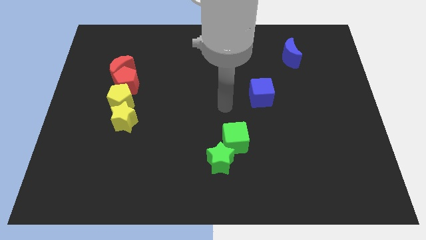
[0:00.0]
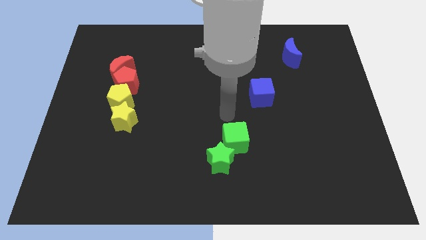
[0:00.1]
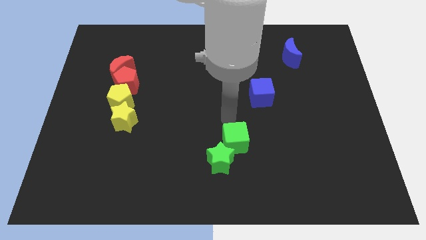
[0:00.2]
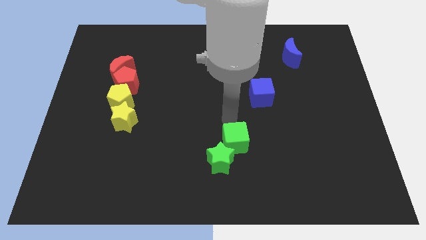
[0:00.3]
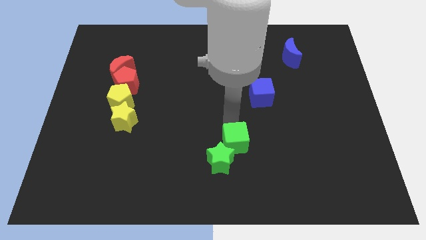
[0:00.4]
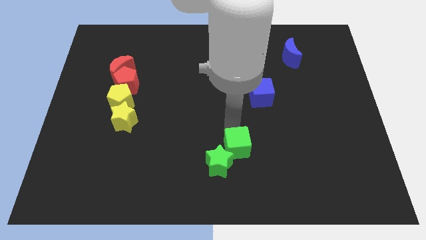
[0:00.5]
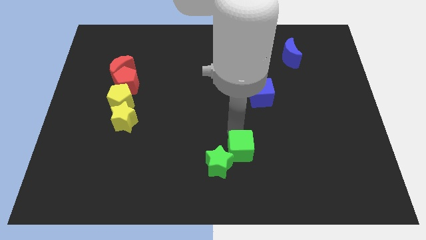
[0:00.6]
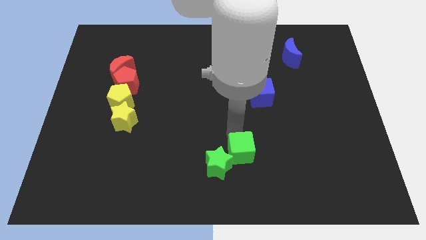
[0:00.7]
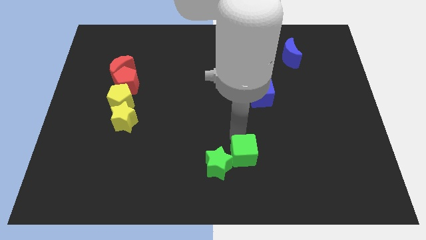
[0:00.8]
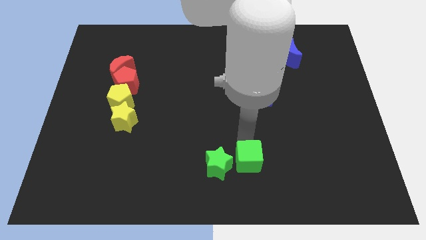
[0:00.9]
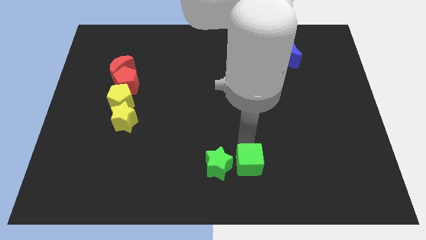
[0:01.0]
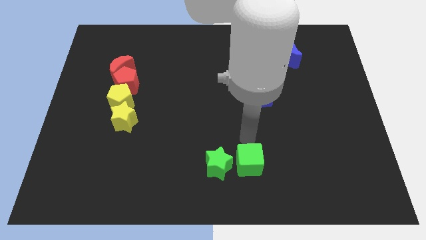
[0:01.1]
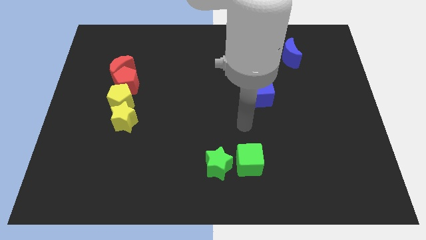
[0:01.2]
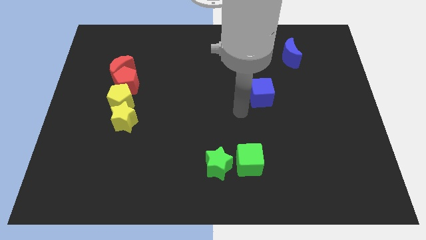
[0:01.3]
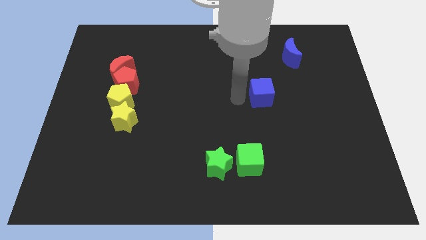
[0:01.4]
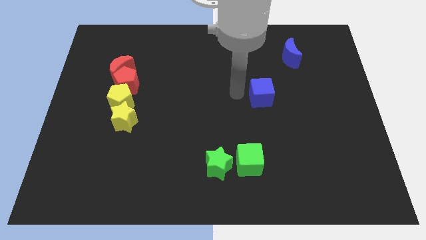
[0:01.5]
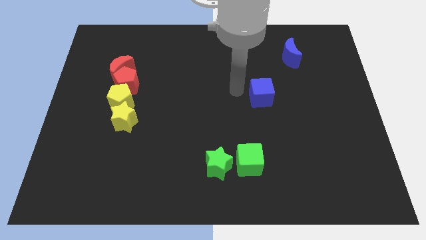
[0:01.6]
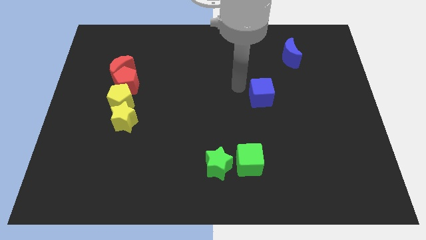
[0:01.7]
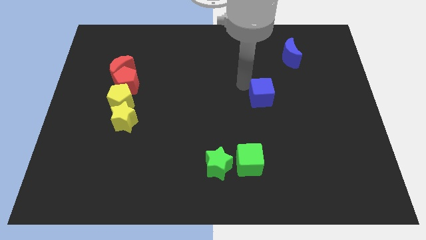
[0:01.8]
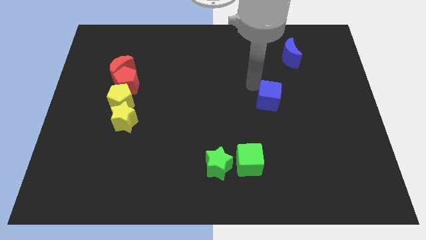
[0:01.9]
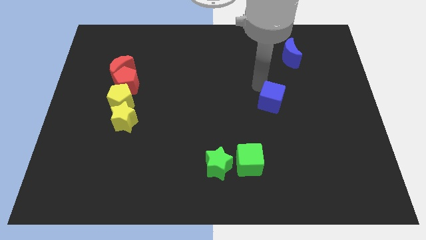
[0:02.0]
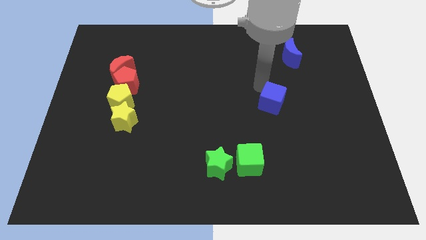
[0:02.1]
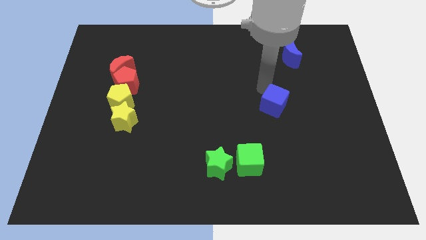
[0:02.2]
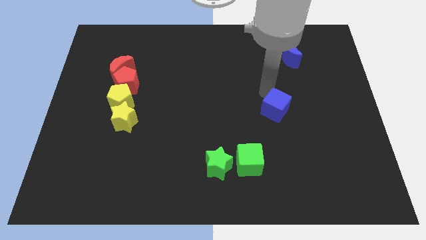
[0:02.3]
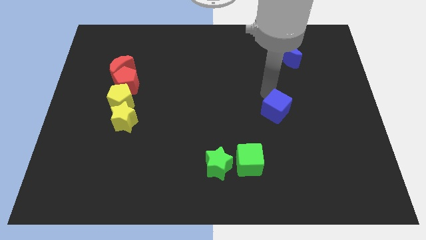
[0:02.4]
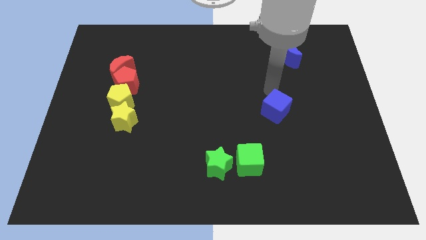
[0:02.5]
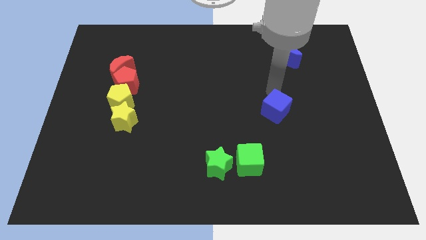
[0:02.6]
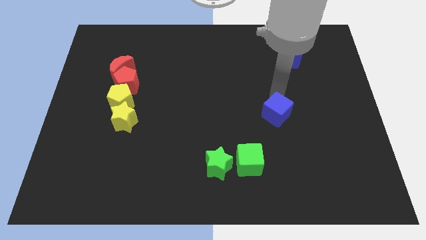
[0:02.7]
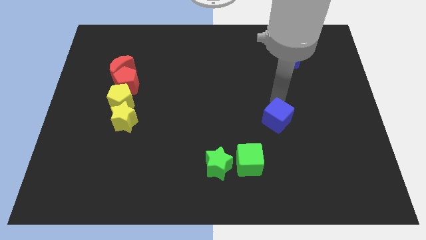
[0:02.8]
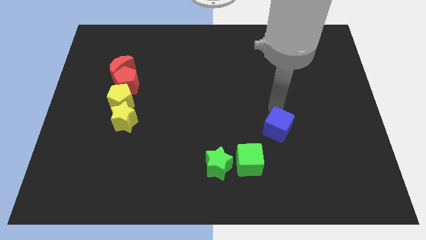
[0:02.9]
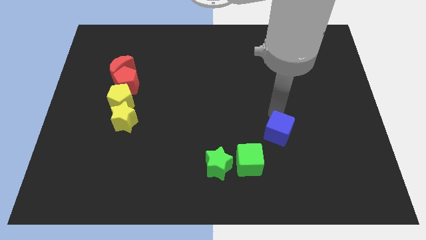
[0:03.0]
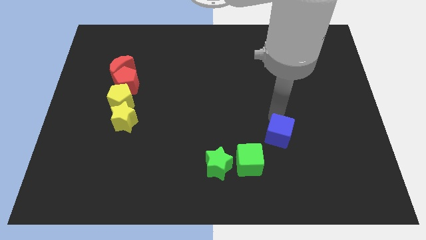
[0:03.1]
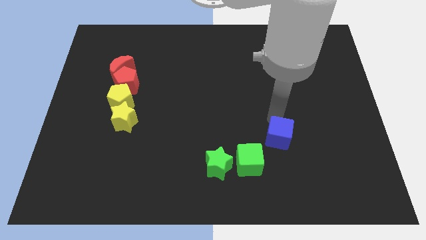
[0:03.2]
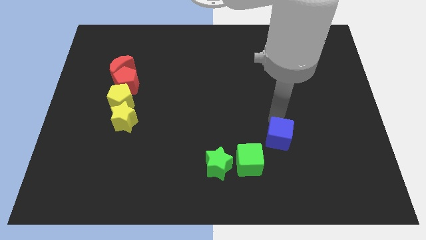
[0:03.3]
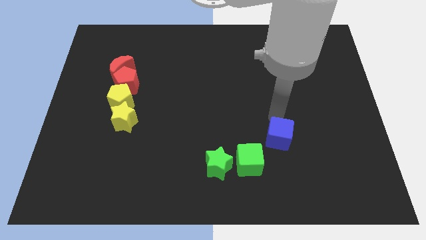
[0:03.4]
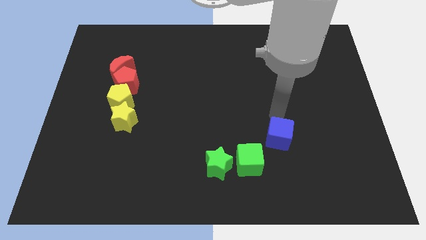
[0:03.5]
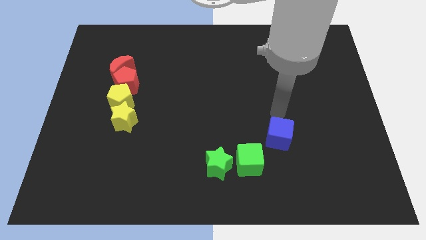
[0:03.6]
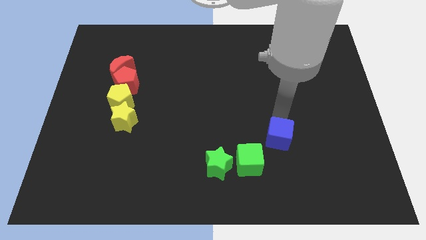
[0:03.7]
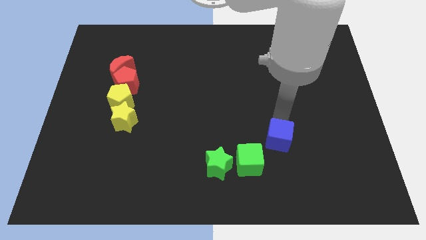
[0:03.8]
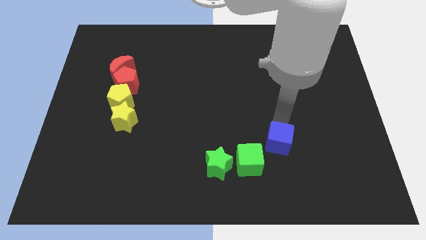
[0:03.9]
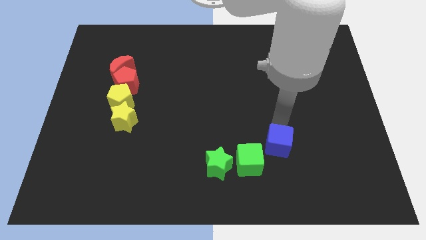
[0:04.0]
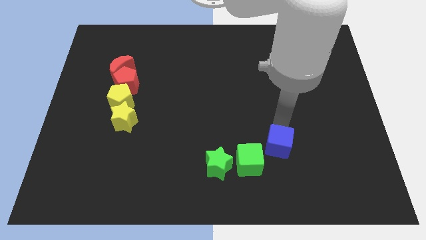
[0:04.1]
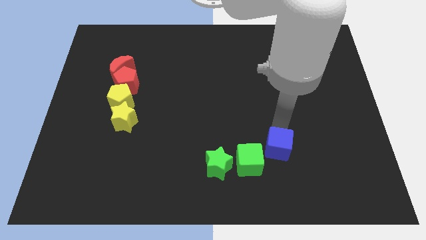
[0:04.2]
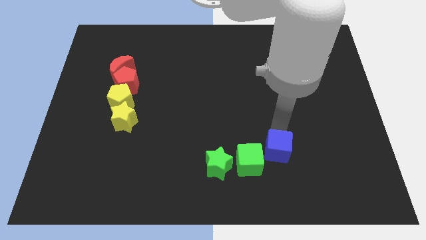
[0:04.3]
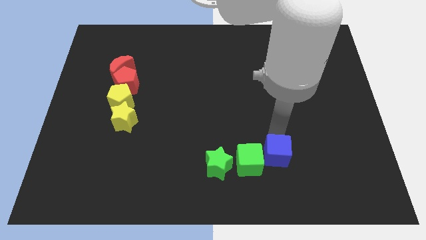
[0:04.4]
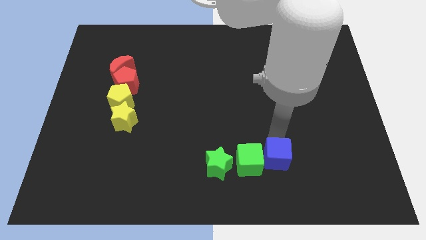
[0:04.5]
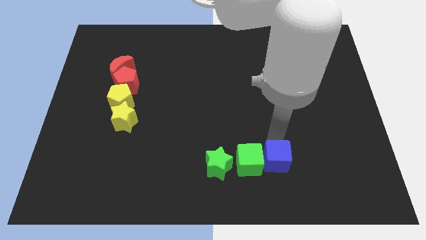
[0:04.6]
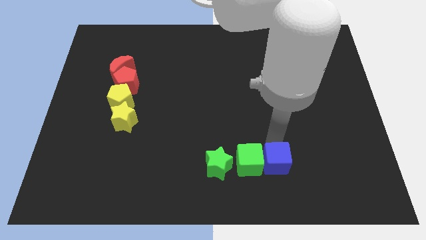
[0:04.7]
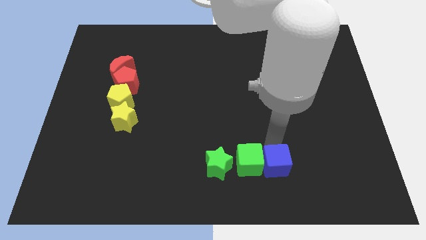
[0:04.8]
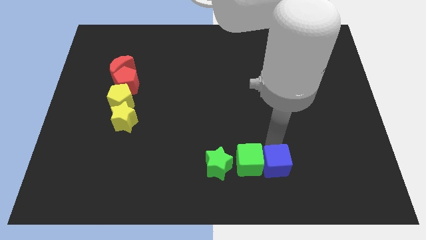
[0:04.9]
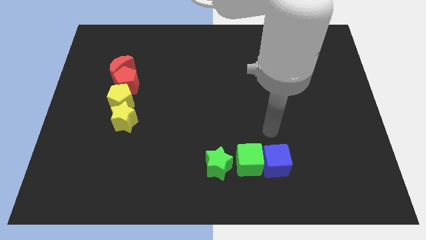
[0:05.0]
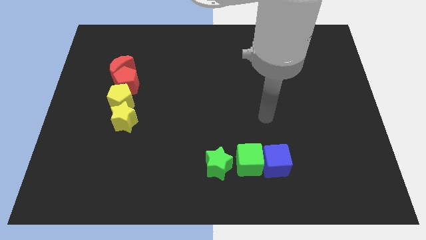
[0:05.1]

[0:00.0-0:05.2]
place blue cube to the right of green cube

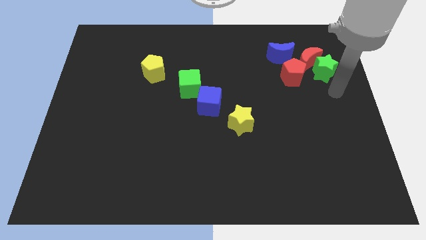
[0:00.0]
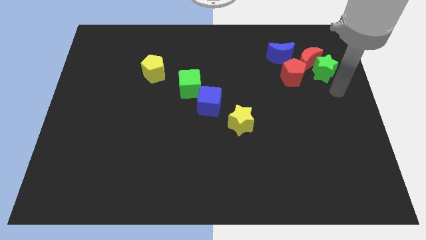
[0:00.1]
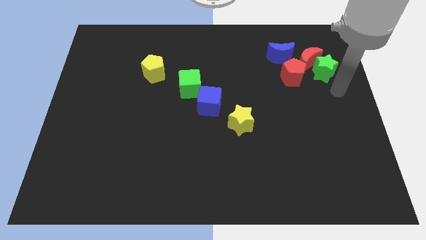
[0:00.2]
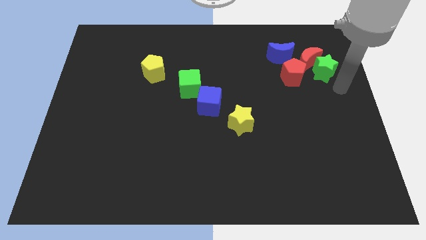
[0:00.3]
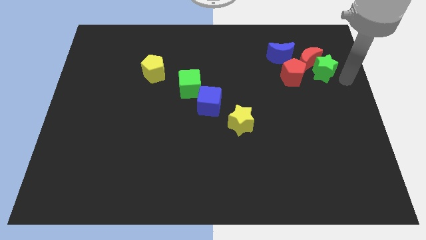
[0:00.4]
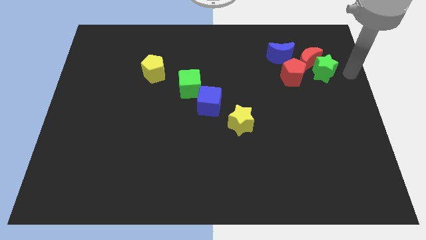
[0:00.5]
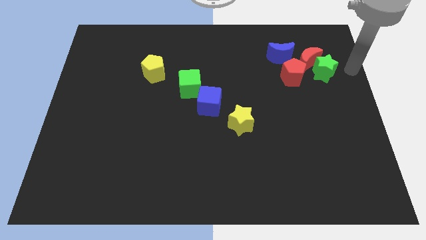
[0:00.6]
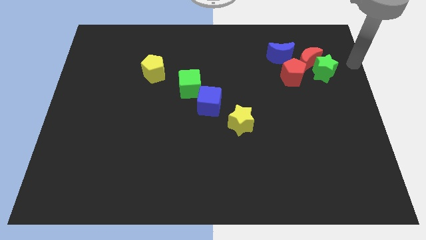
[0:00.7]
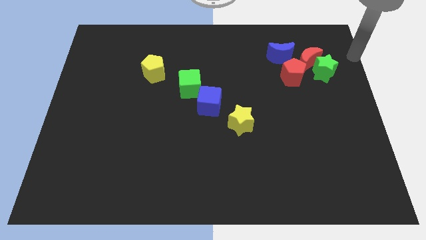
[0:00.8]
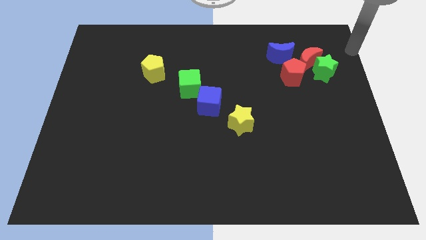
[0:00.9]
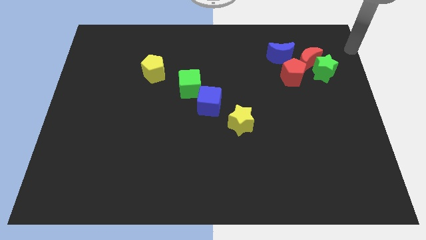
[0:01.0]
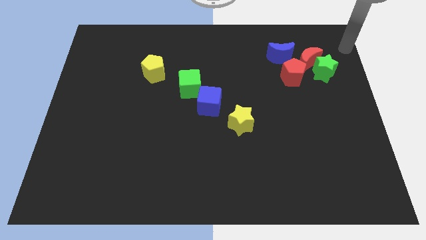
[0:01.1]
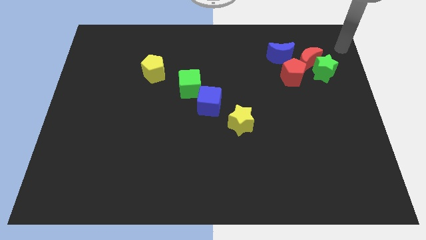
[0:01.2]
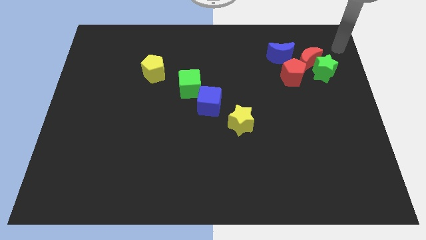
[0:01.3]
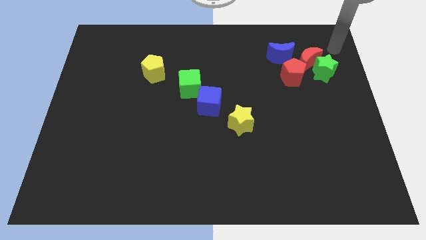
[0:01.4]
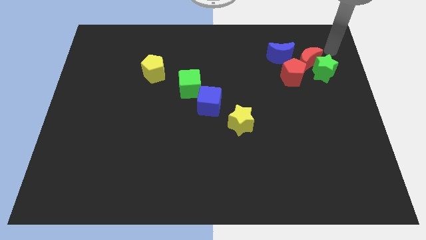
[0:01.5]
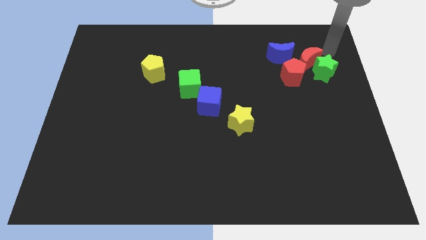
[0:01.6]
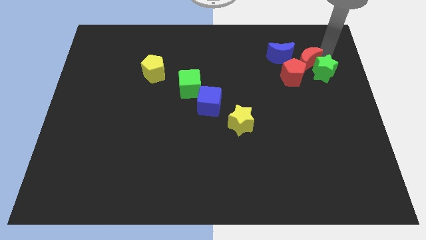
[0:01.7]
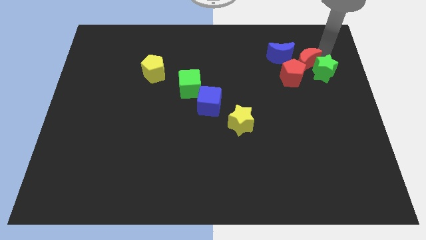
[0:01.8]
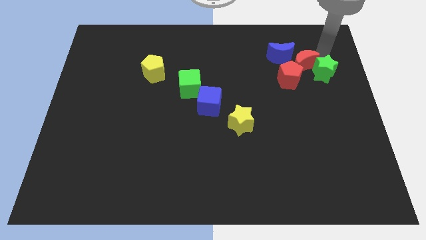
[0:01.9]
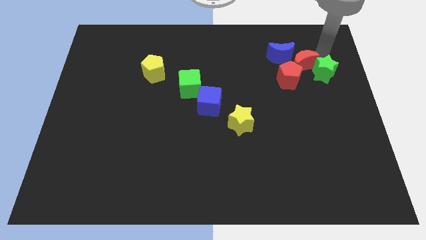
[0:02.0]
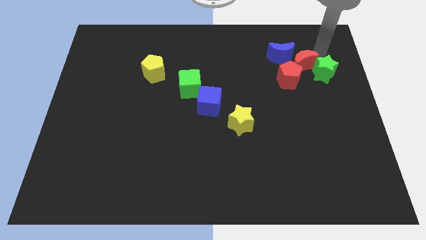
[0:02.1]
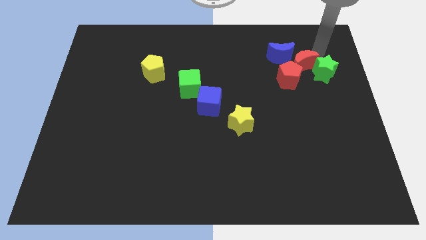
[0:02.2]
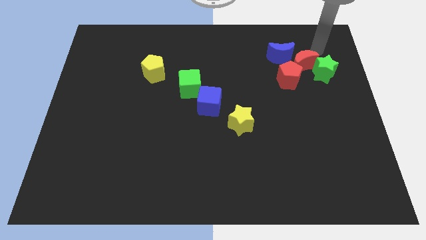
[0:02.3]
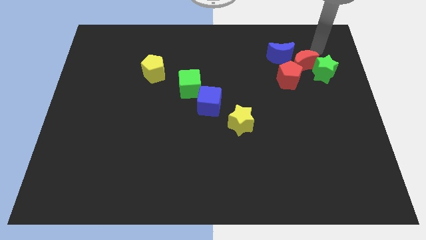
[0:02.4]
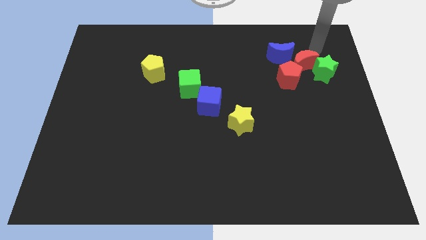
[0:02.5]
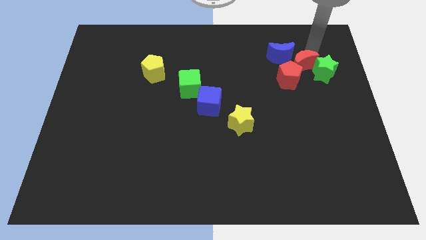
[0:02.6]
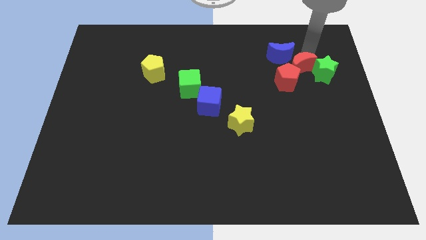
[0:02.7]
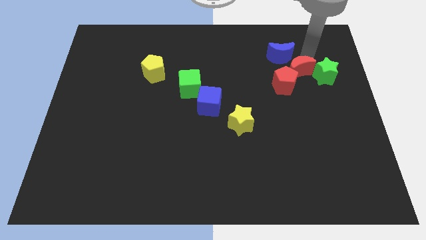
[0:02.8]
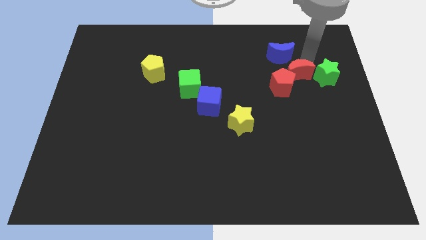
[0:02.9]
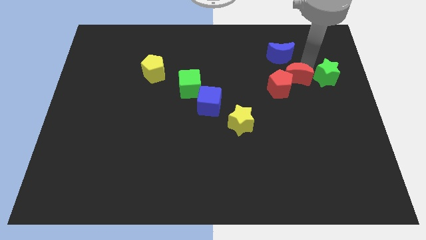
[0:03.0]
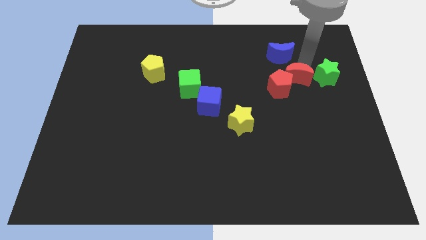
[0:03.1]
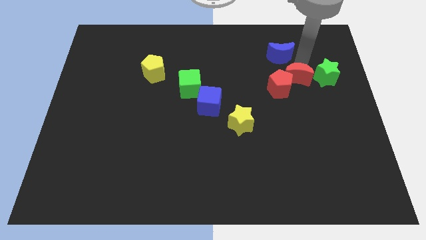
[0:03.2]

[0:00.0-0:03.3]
push the red pentagon down towards the center with the red moon

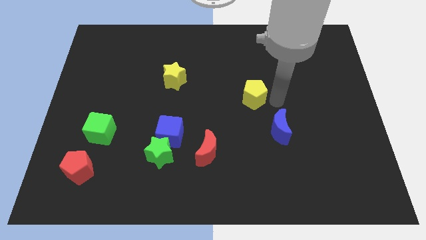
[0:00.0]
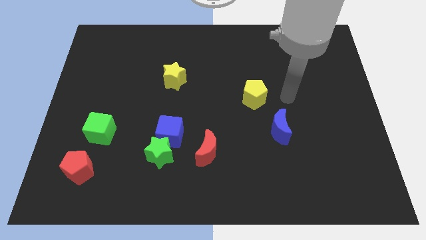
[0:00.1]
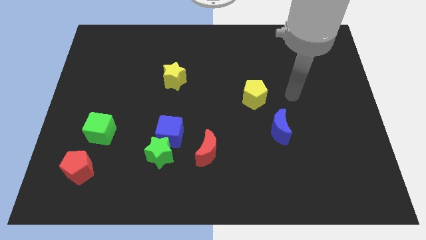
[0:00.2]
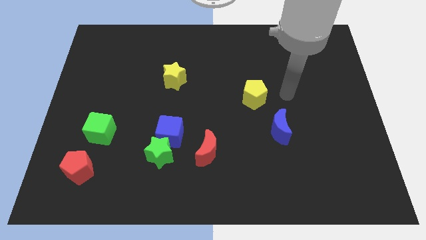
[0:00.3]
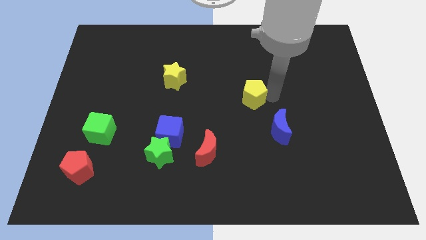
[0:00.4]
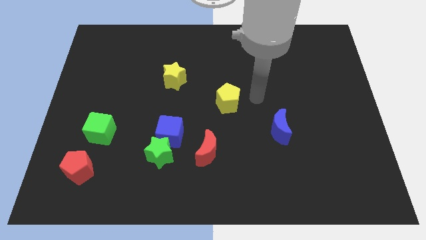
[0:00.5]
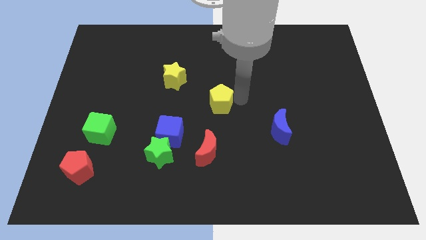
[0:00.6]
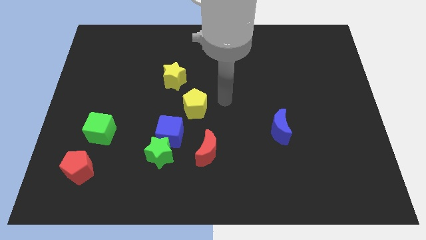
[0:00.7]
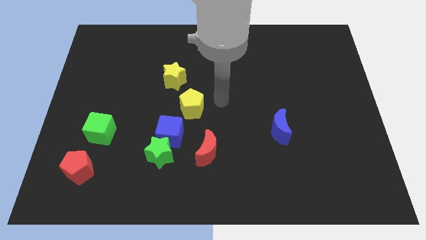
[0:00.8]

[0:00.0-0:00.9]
move the yellow pentagon diagonal top left to red moon
